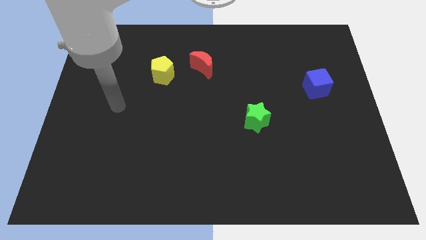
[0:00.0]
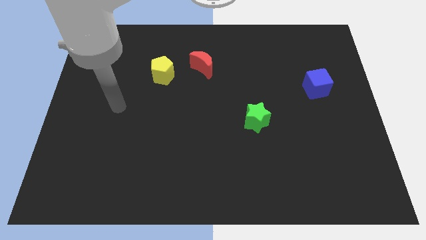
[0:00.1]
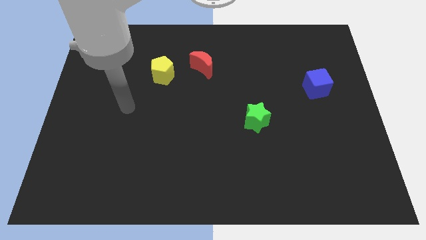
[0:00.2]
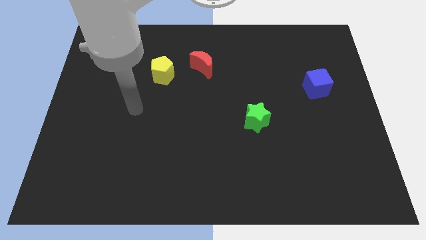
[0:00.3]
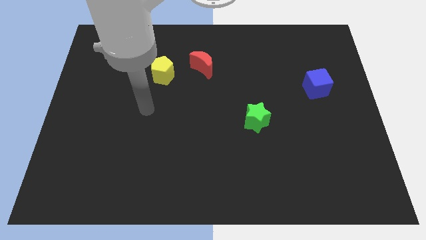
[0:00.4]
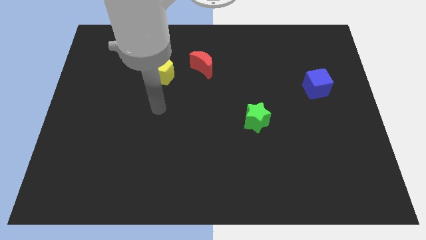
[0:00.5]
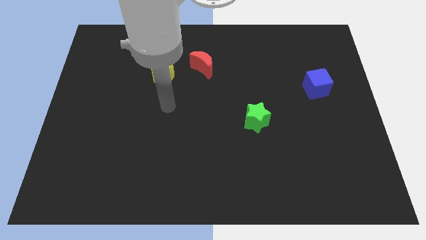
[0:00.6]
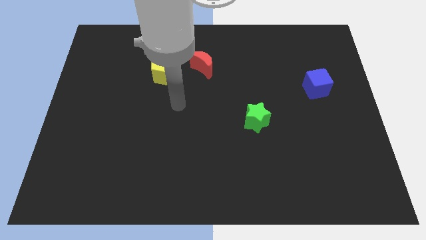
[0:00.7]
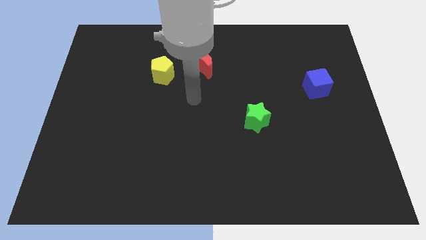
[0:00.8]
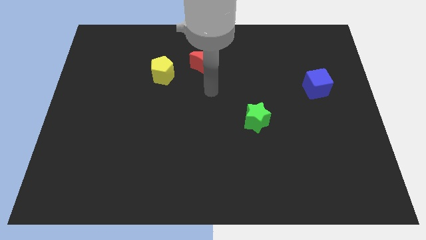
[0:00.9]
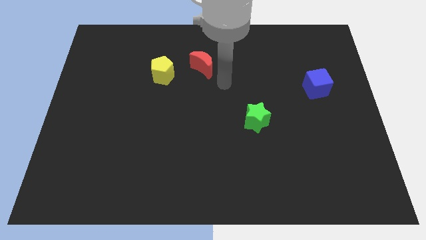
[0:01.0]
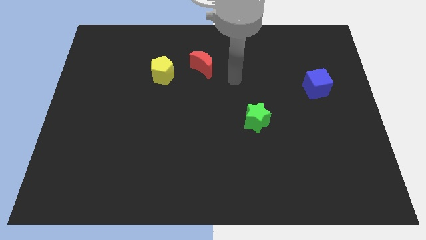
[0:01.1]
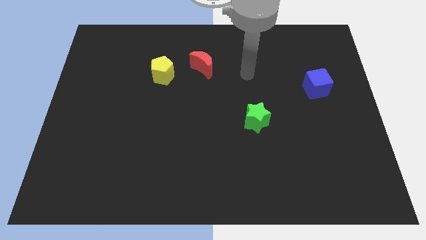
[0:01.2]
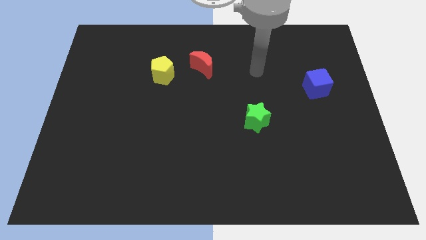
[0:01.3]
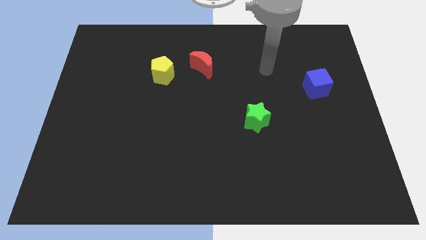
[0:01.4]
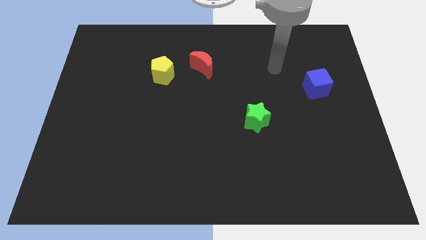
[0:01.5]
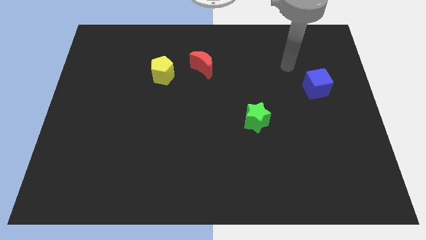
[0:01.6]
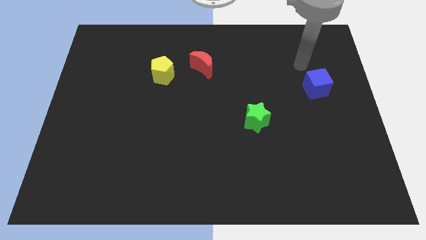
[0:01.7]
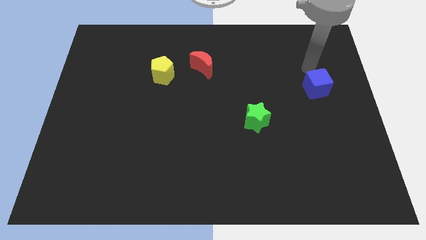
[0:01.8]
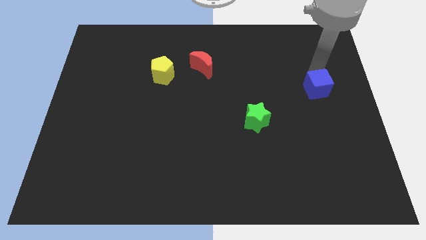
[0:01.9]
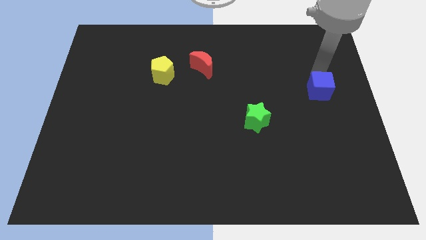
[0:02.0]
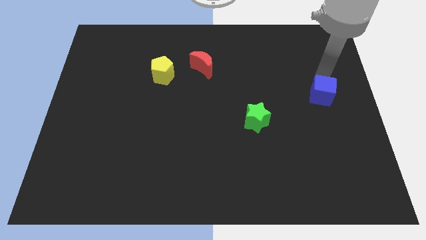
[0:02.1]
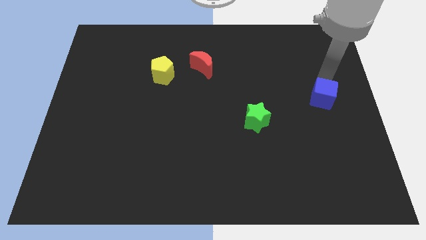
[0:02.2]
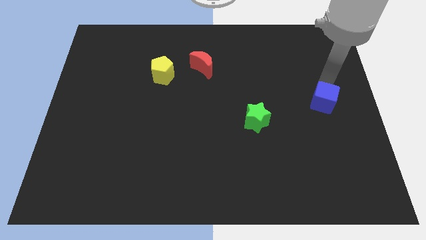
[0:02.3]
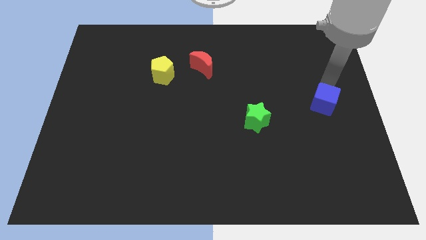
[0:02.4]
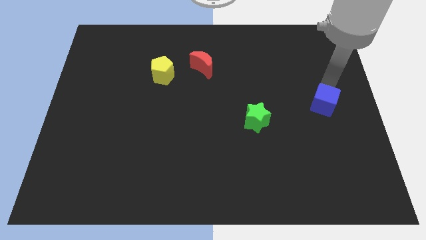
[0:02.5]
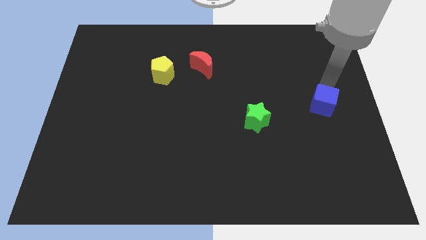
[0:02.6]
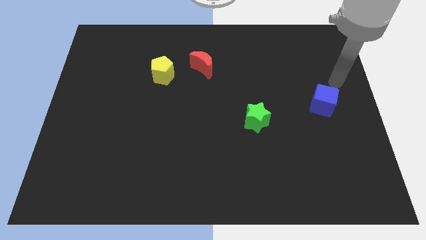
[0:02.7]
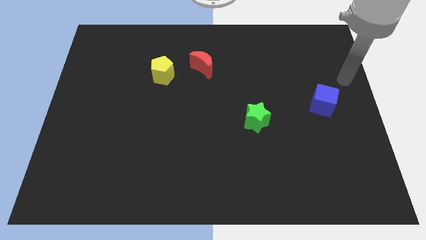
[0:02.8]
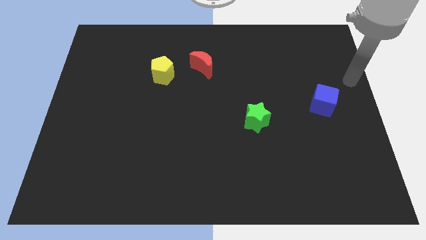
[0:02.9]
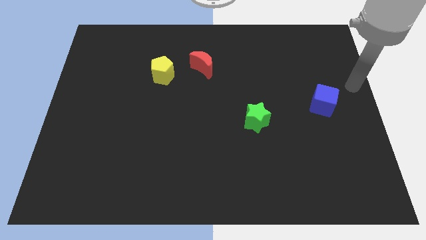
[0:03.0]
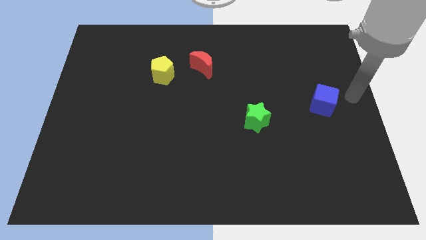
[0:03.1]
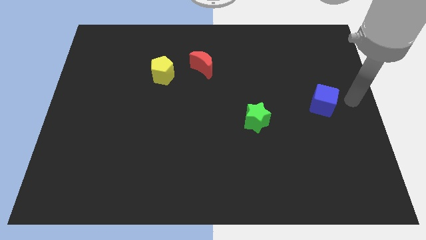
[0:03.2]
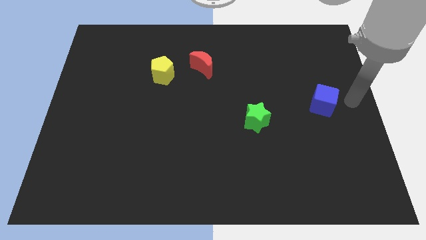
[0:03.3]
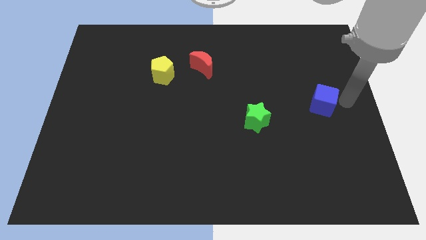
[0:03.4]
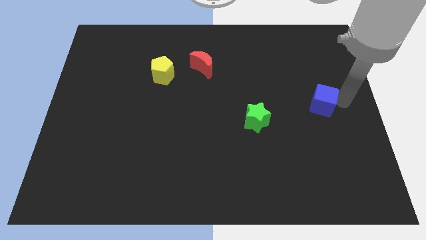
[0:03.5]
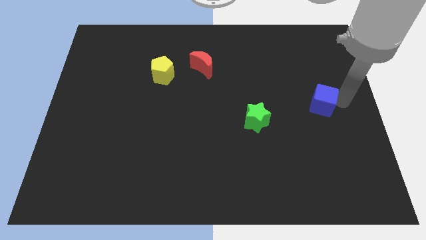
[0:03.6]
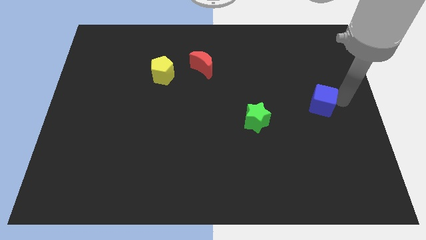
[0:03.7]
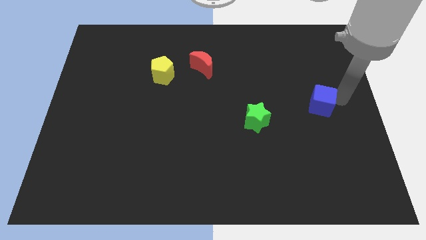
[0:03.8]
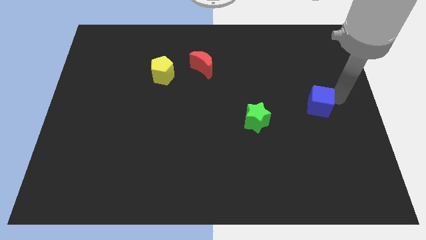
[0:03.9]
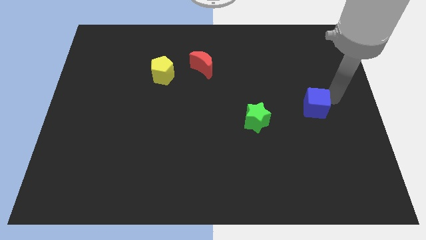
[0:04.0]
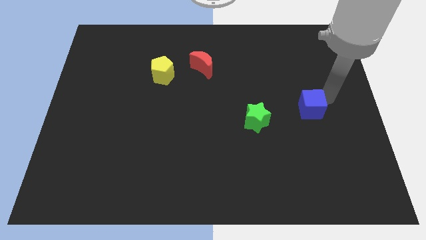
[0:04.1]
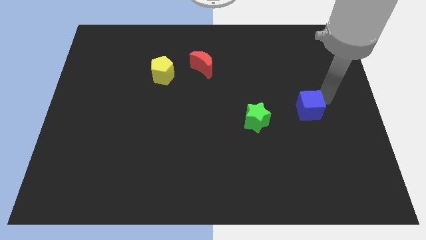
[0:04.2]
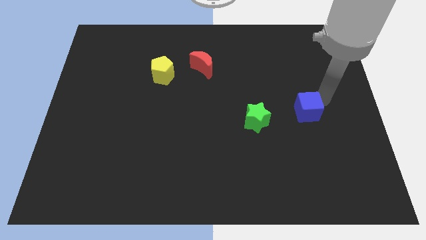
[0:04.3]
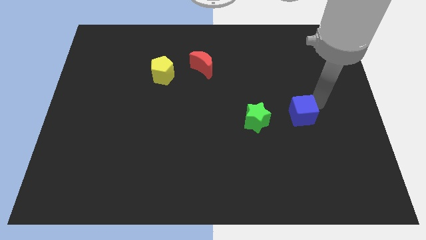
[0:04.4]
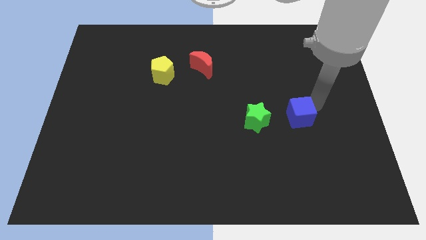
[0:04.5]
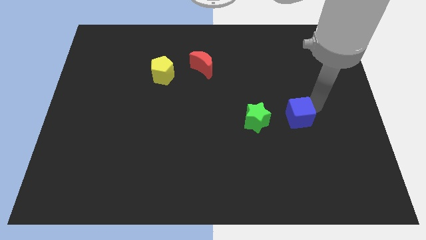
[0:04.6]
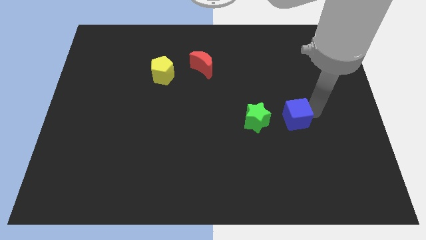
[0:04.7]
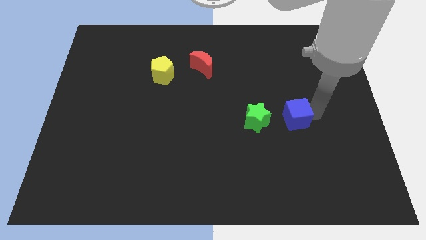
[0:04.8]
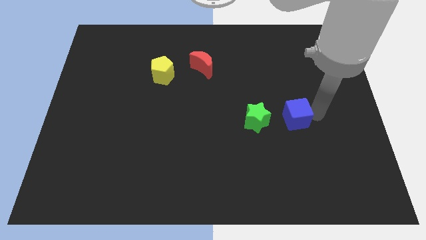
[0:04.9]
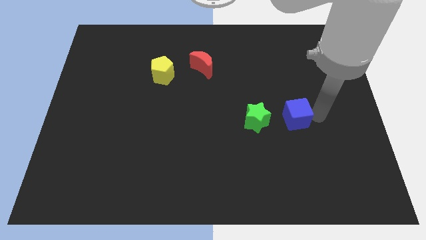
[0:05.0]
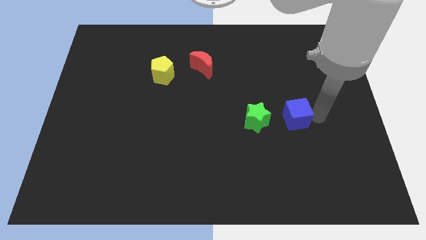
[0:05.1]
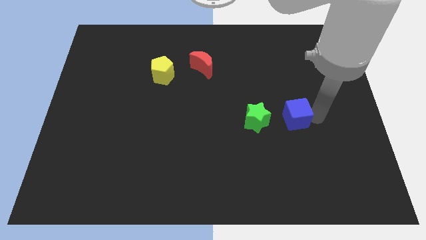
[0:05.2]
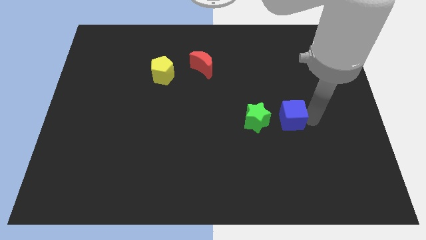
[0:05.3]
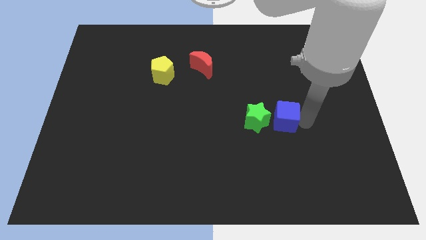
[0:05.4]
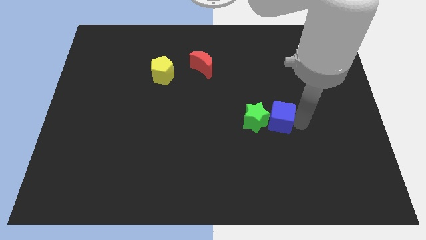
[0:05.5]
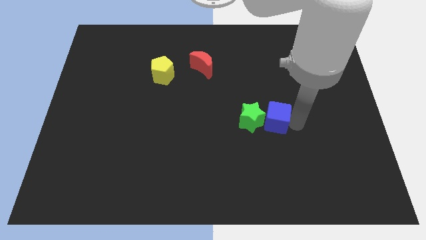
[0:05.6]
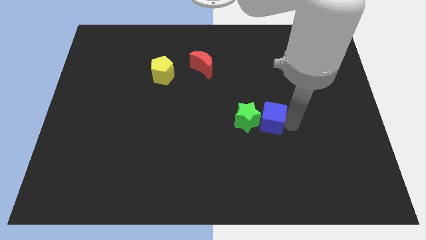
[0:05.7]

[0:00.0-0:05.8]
push the cube to the star

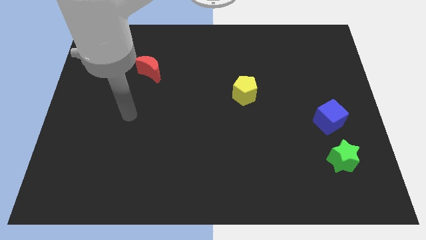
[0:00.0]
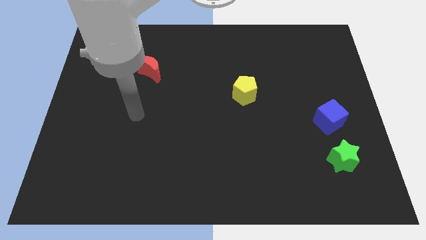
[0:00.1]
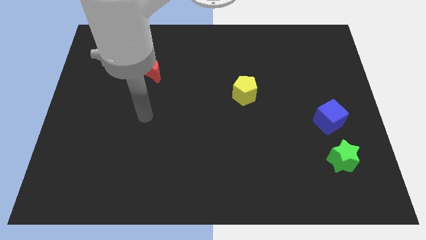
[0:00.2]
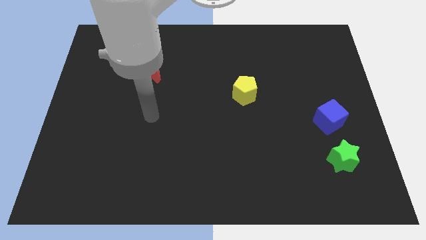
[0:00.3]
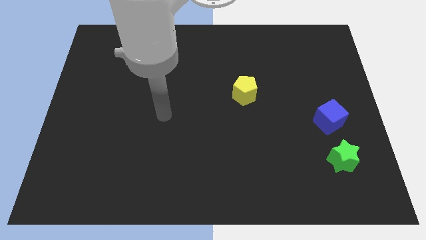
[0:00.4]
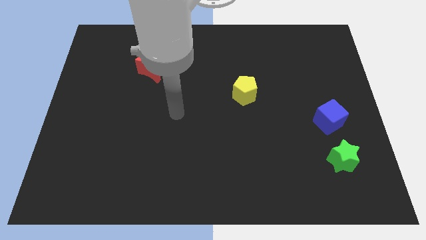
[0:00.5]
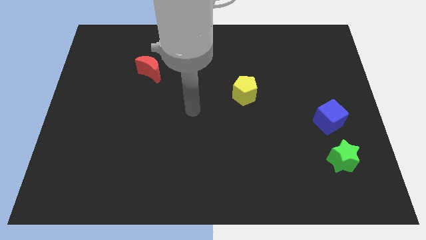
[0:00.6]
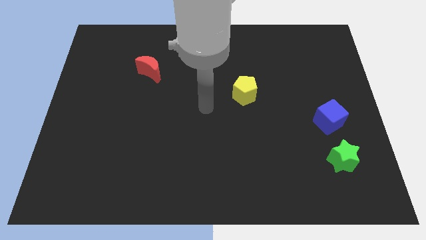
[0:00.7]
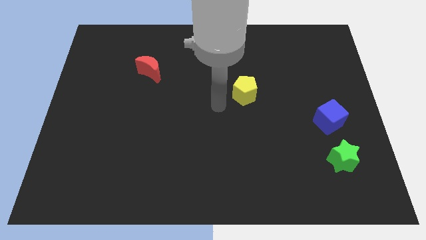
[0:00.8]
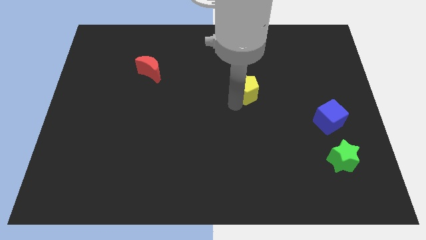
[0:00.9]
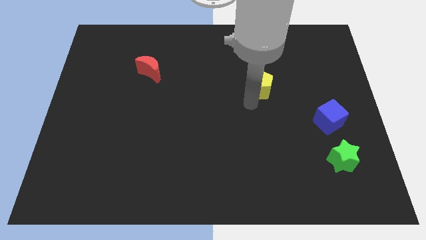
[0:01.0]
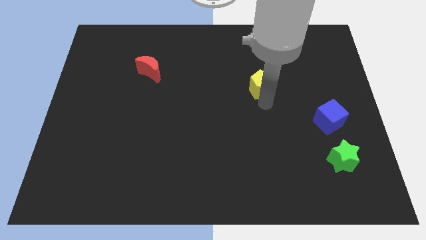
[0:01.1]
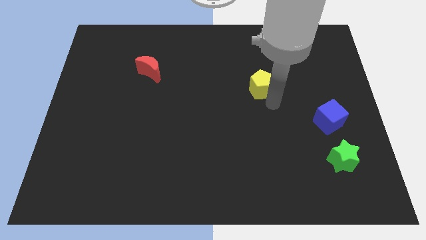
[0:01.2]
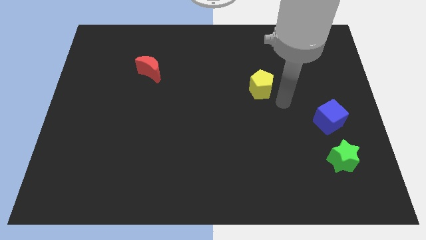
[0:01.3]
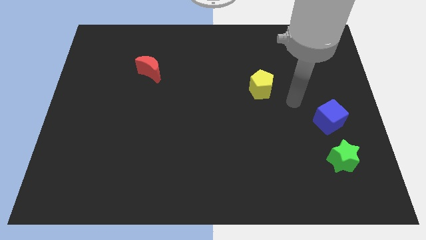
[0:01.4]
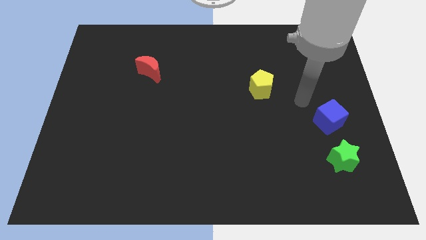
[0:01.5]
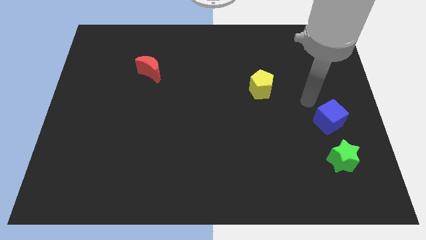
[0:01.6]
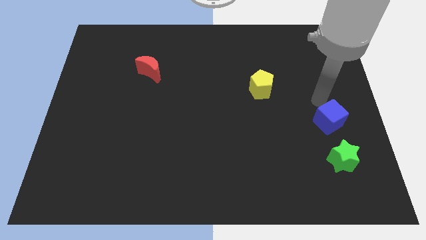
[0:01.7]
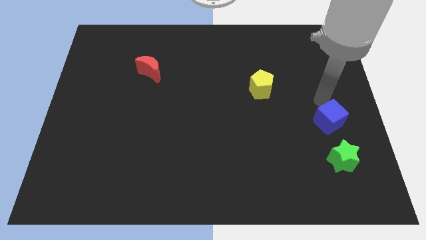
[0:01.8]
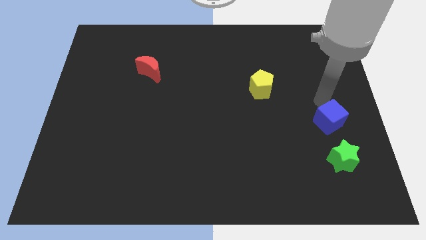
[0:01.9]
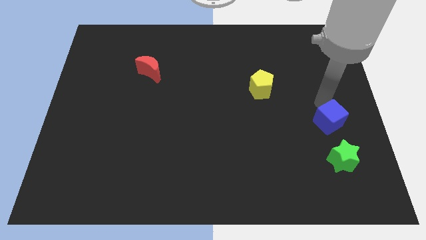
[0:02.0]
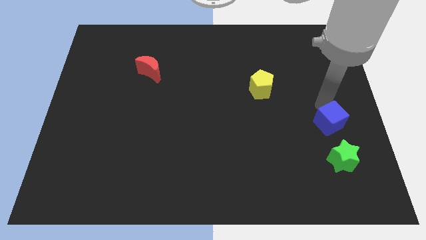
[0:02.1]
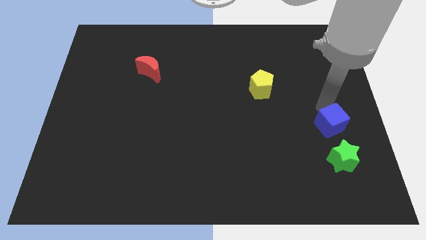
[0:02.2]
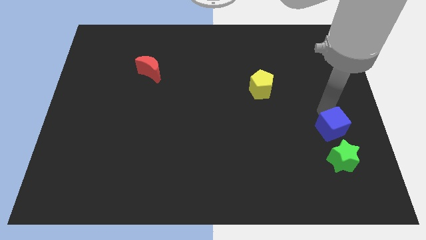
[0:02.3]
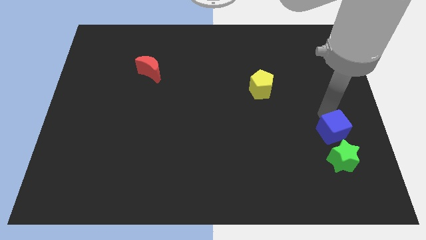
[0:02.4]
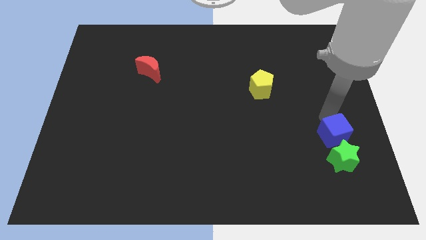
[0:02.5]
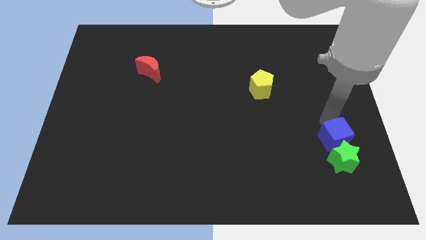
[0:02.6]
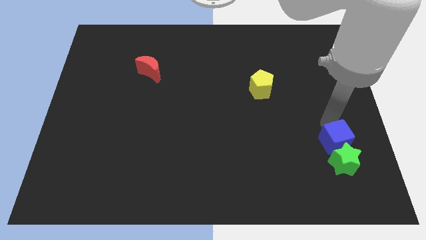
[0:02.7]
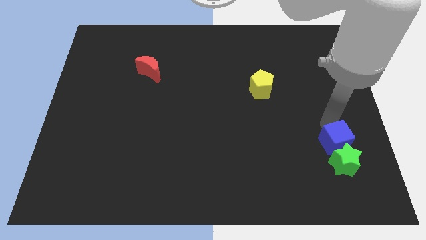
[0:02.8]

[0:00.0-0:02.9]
move the cube close to the green block

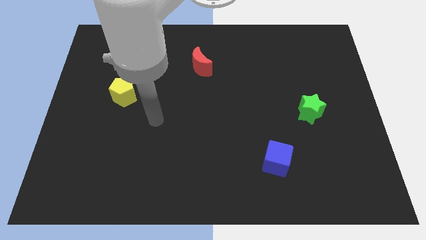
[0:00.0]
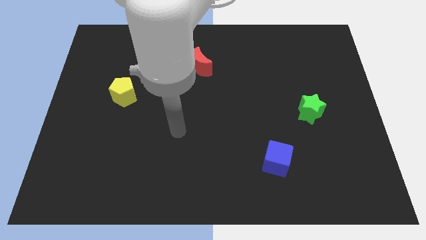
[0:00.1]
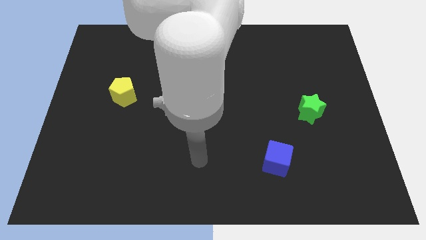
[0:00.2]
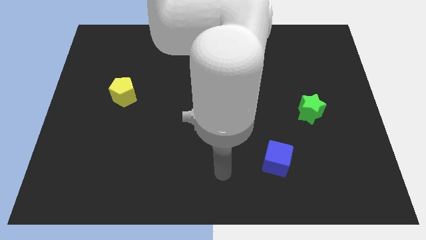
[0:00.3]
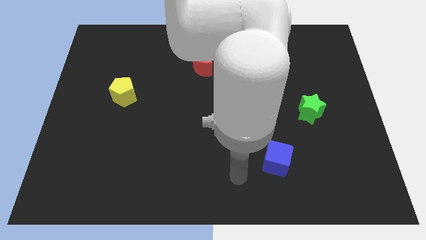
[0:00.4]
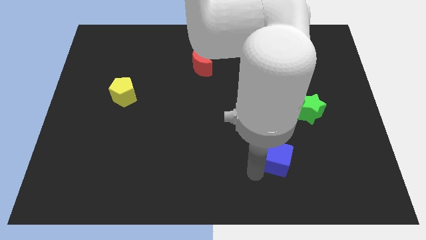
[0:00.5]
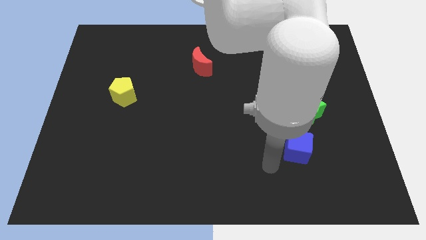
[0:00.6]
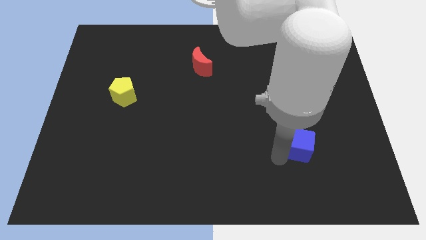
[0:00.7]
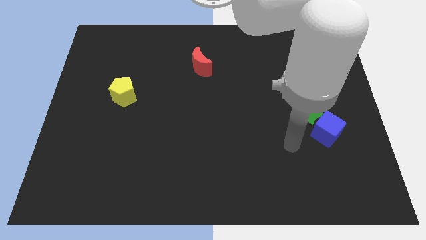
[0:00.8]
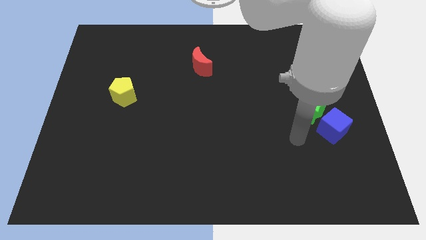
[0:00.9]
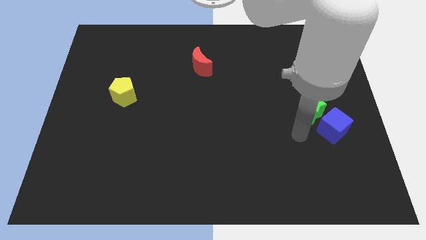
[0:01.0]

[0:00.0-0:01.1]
slide the blue cube towards the green block
